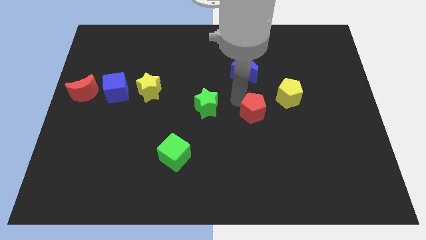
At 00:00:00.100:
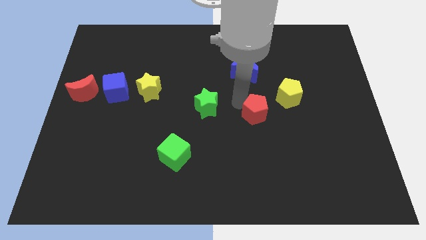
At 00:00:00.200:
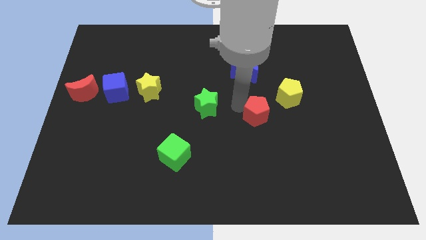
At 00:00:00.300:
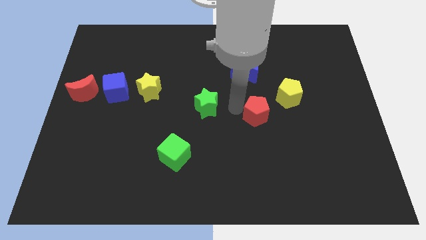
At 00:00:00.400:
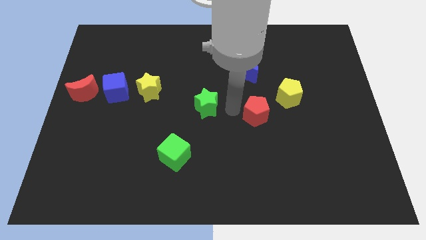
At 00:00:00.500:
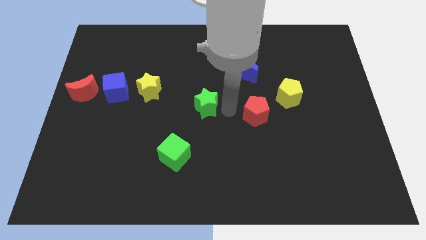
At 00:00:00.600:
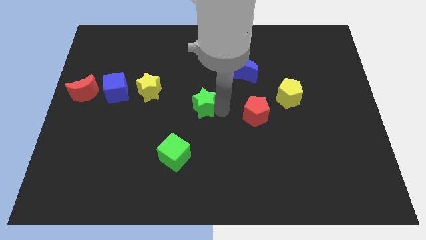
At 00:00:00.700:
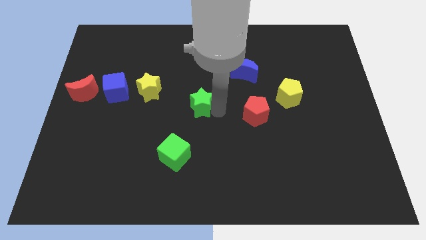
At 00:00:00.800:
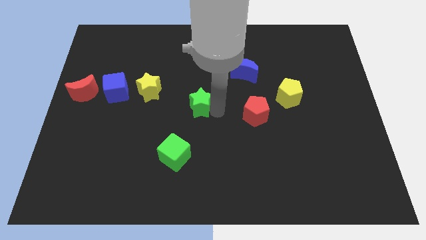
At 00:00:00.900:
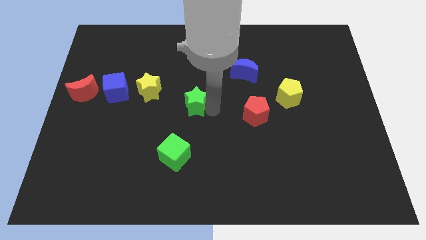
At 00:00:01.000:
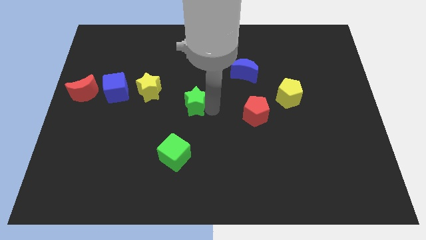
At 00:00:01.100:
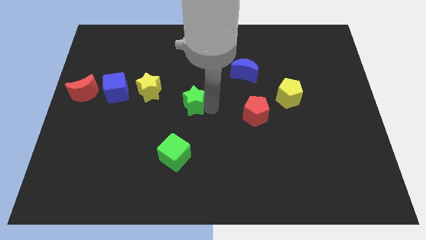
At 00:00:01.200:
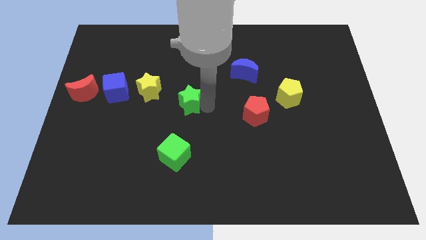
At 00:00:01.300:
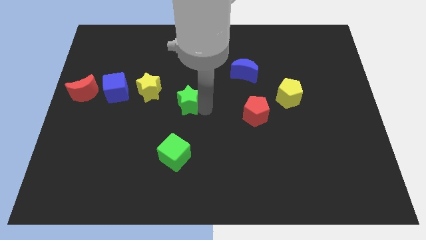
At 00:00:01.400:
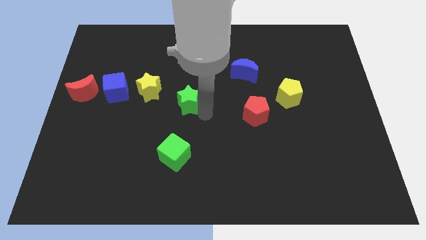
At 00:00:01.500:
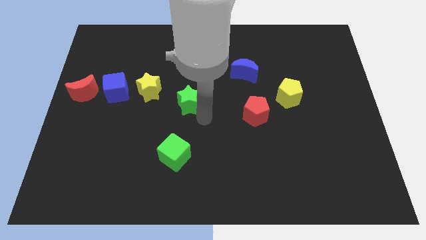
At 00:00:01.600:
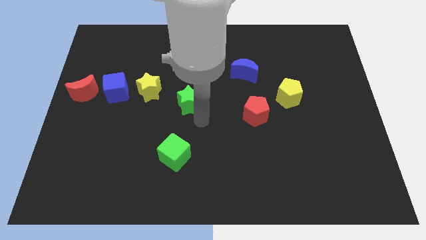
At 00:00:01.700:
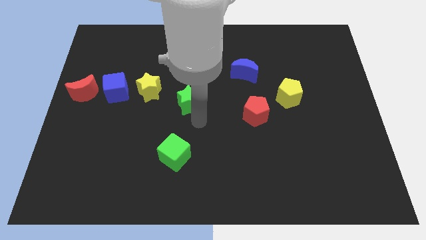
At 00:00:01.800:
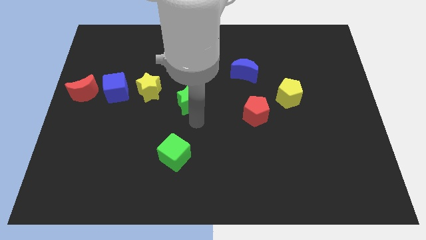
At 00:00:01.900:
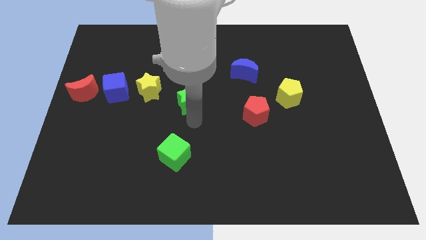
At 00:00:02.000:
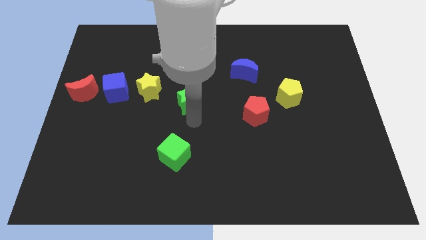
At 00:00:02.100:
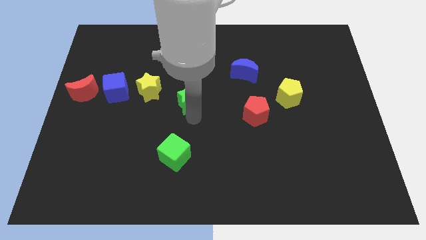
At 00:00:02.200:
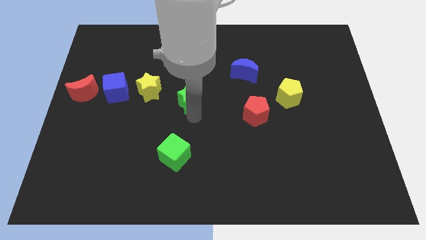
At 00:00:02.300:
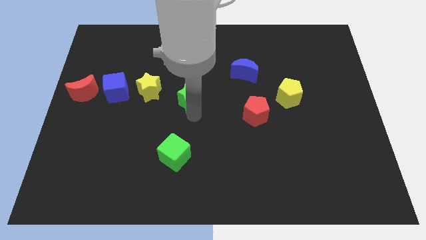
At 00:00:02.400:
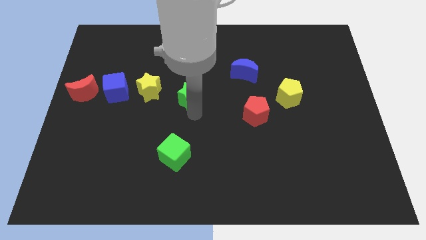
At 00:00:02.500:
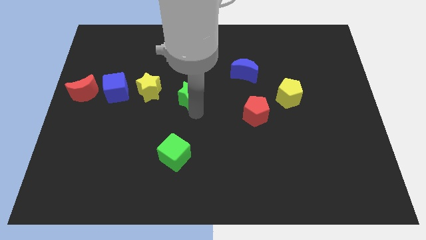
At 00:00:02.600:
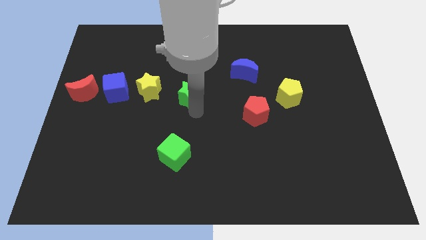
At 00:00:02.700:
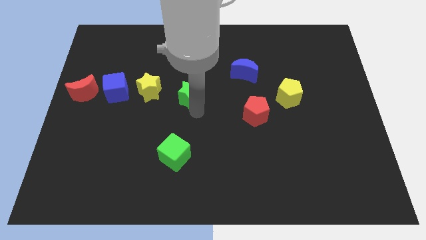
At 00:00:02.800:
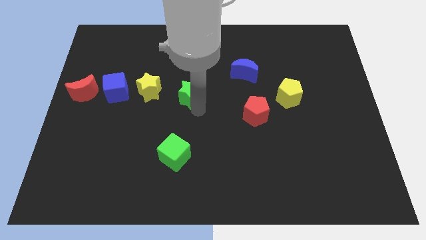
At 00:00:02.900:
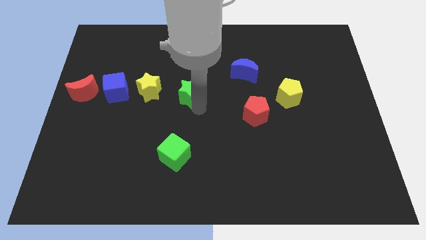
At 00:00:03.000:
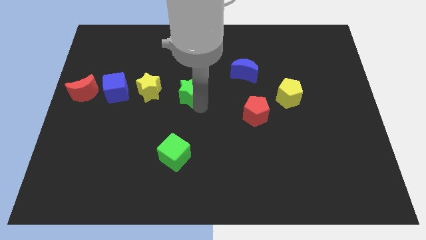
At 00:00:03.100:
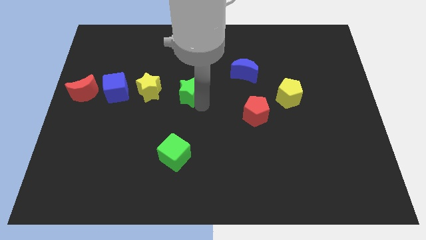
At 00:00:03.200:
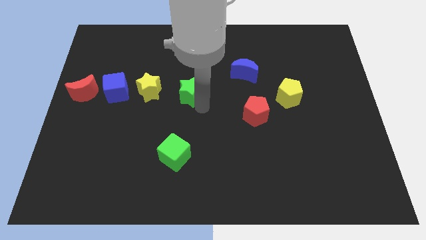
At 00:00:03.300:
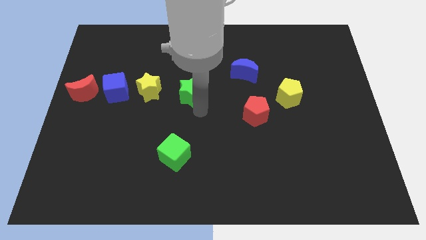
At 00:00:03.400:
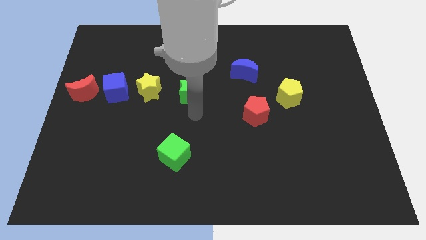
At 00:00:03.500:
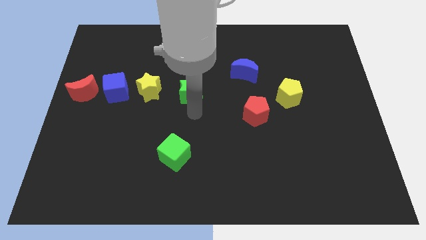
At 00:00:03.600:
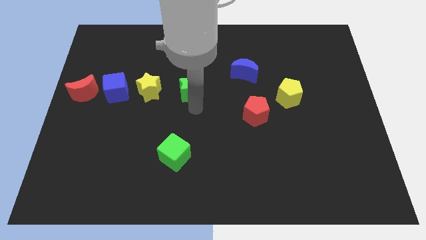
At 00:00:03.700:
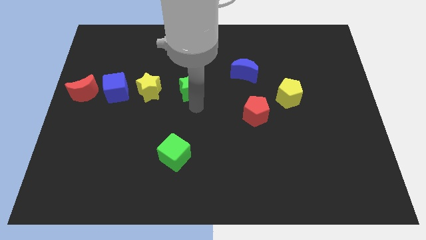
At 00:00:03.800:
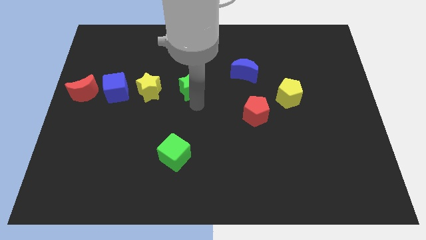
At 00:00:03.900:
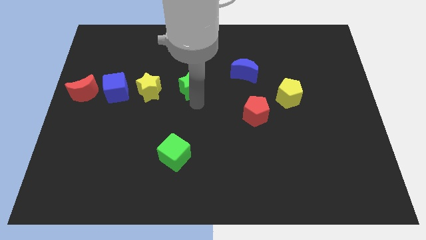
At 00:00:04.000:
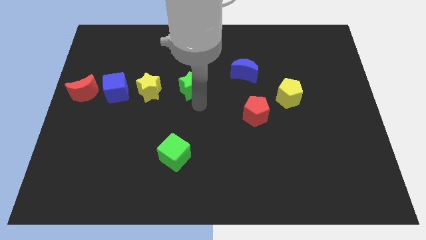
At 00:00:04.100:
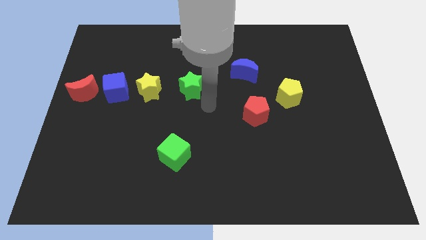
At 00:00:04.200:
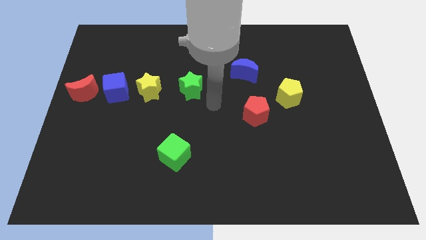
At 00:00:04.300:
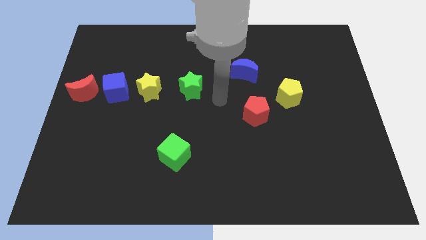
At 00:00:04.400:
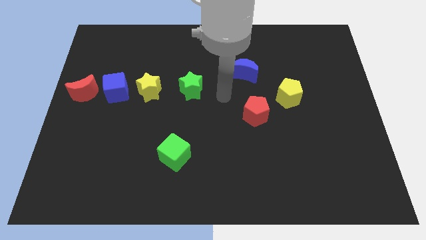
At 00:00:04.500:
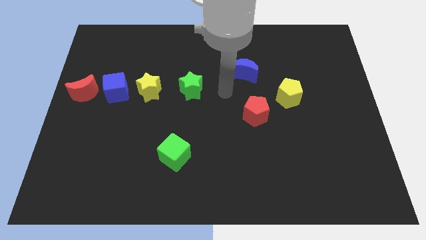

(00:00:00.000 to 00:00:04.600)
place the green star to the right of yellow star

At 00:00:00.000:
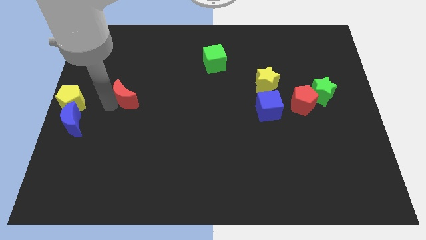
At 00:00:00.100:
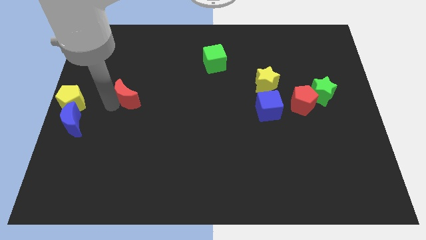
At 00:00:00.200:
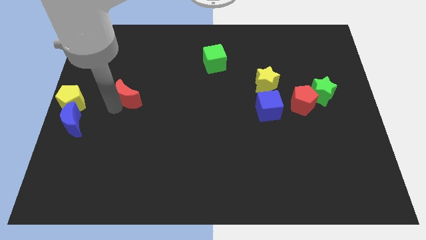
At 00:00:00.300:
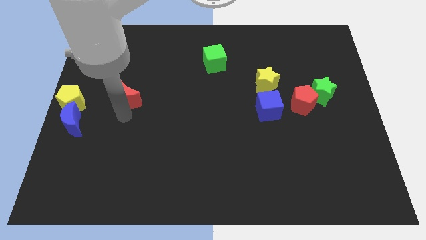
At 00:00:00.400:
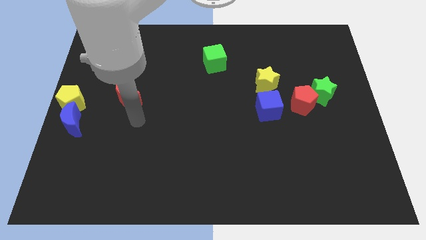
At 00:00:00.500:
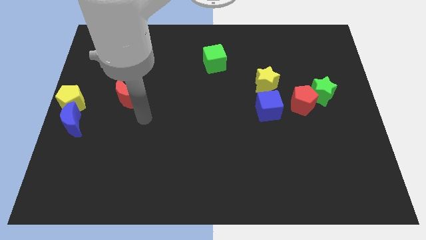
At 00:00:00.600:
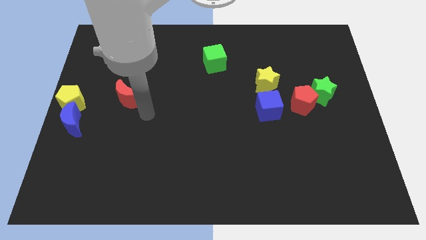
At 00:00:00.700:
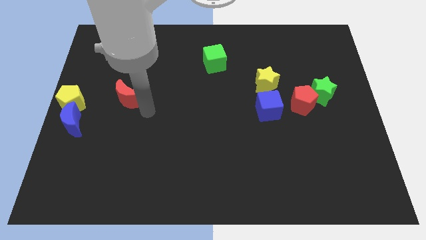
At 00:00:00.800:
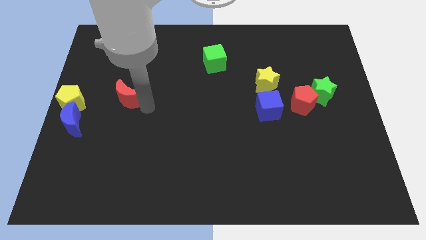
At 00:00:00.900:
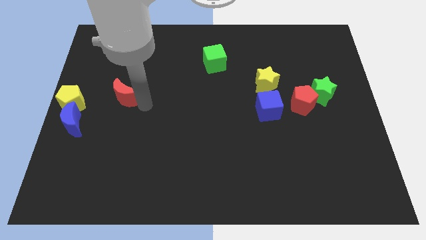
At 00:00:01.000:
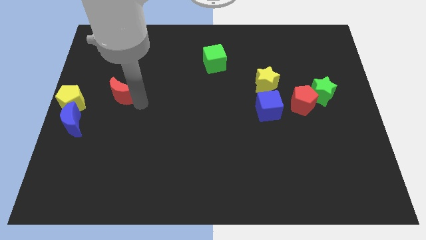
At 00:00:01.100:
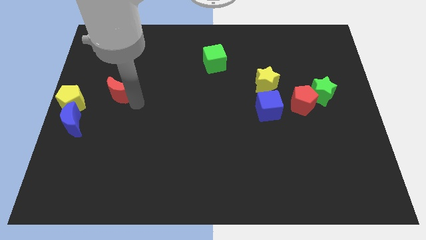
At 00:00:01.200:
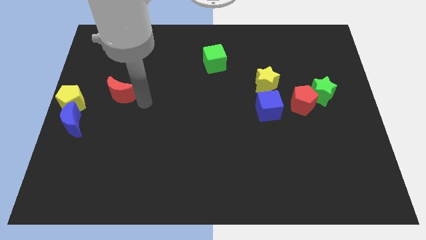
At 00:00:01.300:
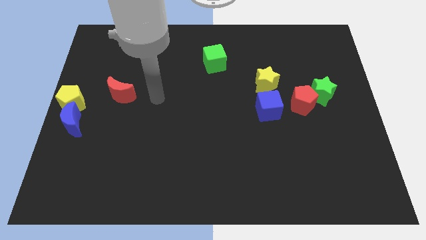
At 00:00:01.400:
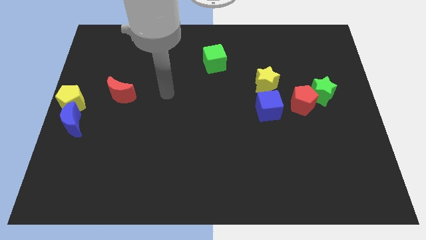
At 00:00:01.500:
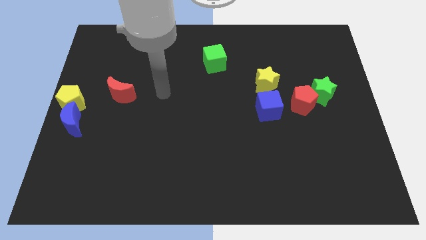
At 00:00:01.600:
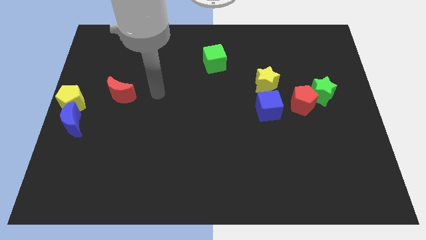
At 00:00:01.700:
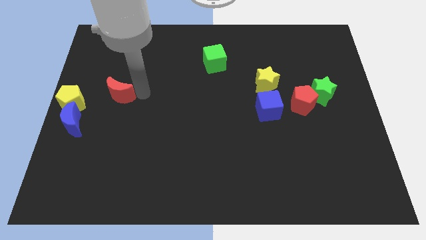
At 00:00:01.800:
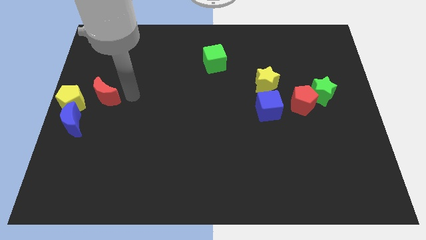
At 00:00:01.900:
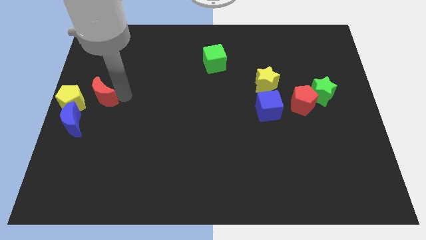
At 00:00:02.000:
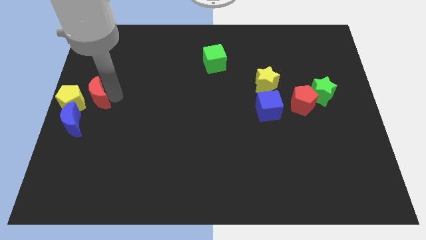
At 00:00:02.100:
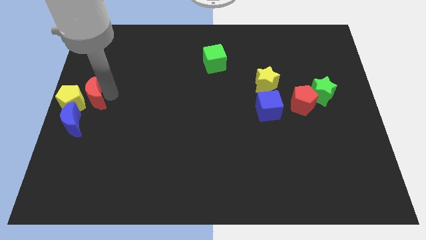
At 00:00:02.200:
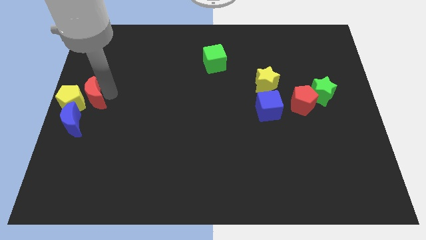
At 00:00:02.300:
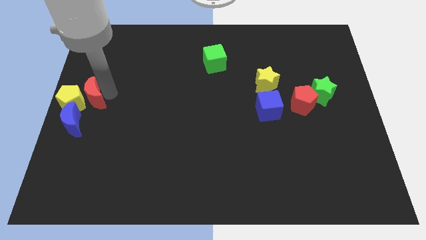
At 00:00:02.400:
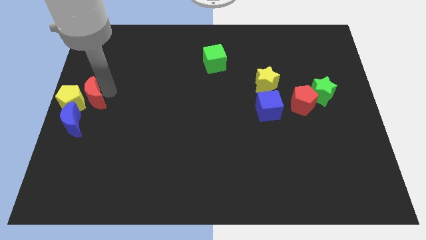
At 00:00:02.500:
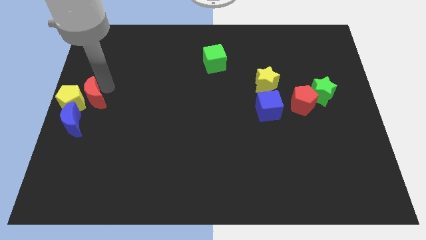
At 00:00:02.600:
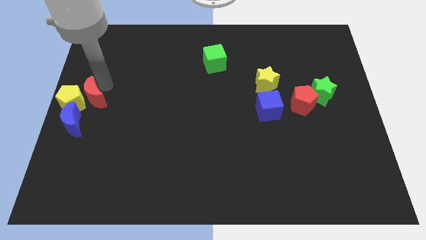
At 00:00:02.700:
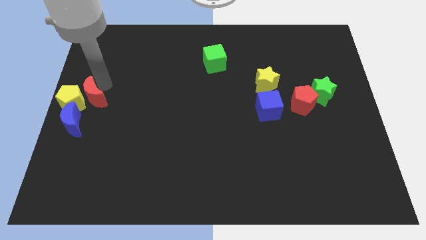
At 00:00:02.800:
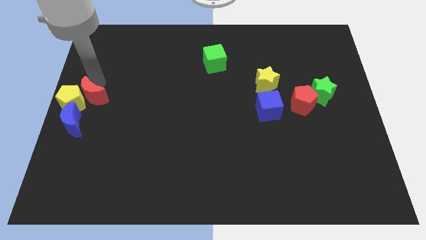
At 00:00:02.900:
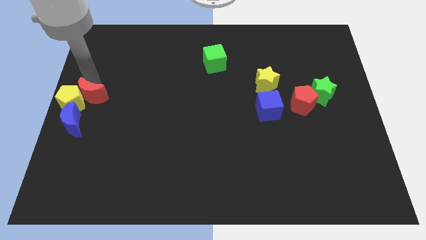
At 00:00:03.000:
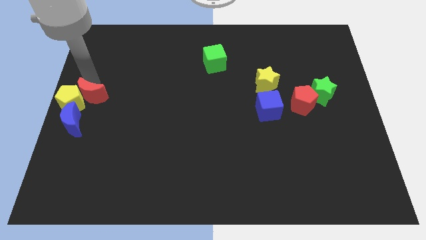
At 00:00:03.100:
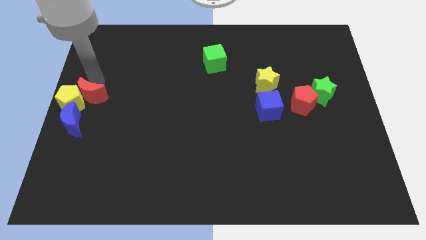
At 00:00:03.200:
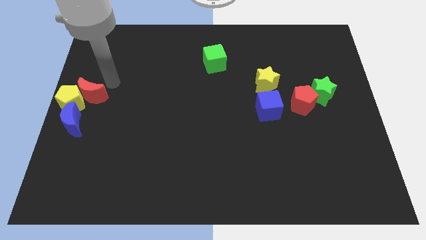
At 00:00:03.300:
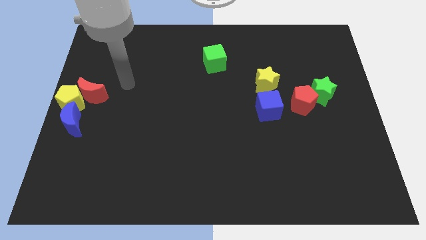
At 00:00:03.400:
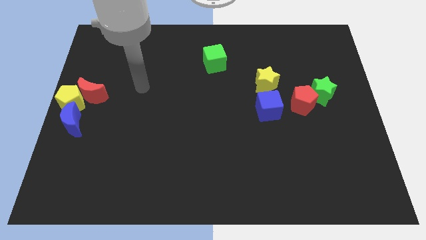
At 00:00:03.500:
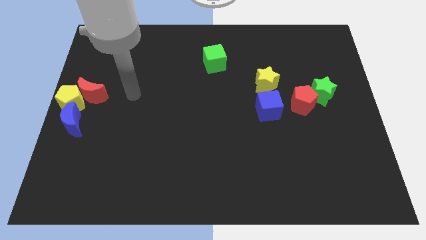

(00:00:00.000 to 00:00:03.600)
push the red crescent into yellow pentagon

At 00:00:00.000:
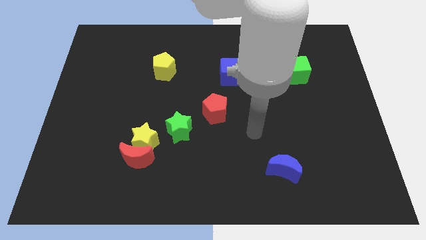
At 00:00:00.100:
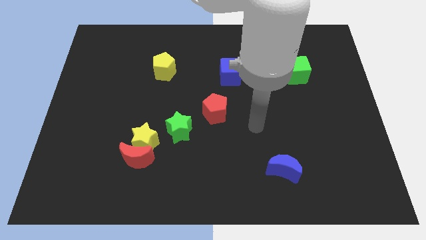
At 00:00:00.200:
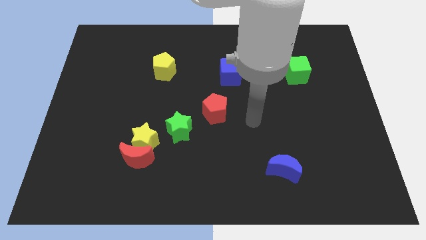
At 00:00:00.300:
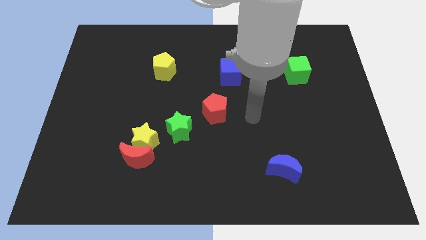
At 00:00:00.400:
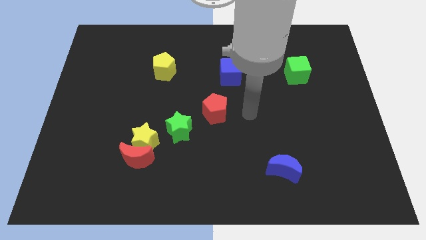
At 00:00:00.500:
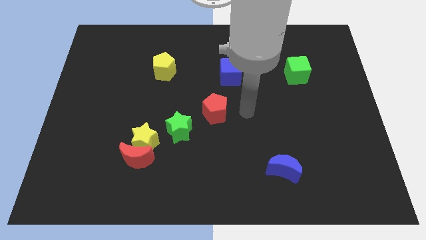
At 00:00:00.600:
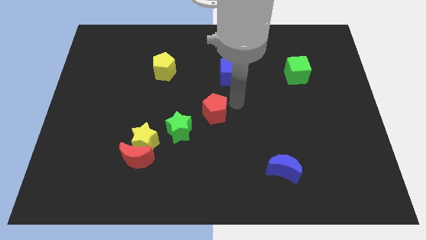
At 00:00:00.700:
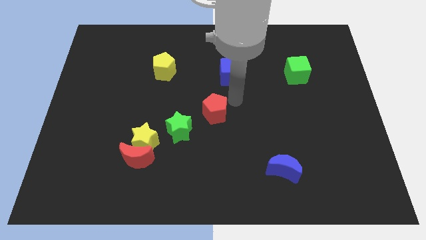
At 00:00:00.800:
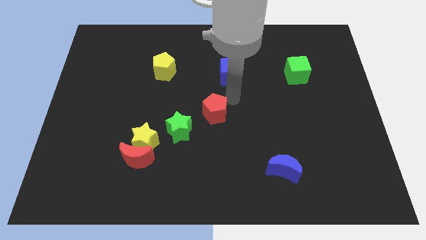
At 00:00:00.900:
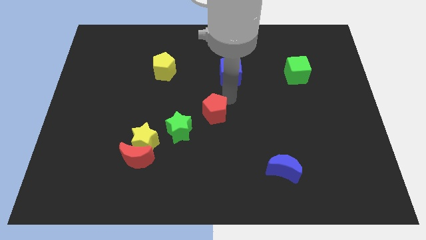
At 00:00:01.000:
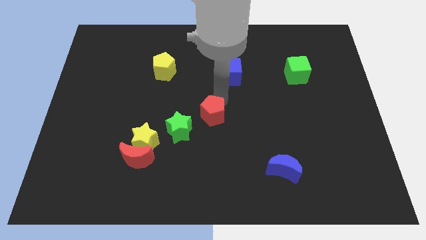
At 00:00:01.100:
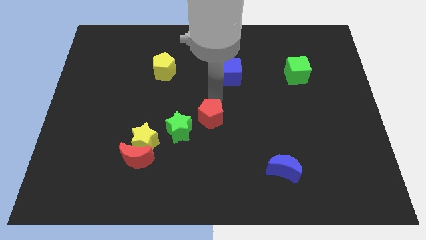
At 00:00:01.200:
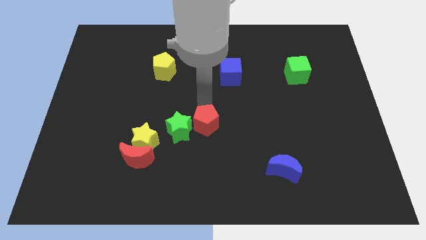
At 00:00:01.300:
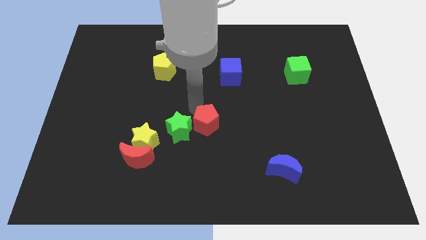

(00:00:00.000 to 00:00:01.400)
push the red pentagon close to the green star
